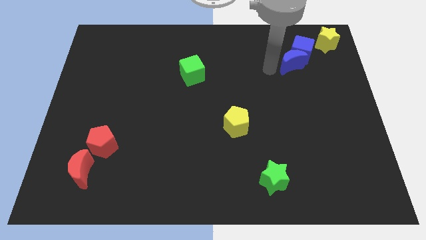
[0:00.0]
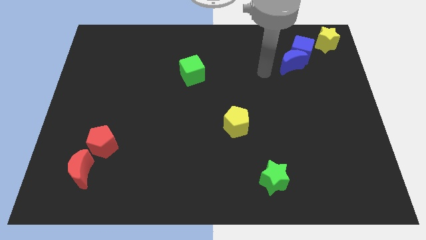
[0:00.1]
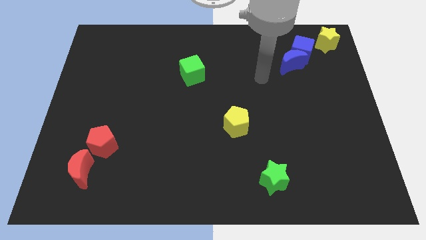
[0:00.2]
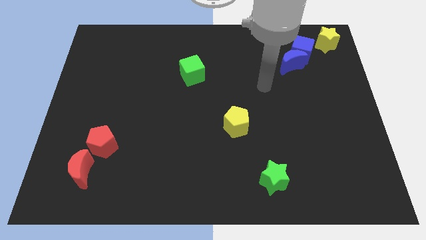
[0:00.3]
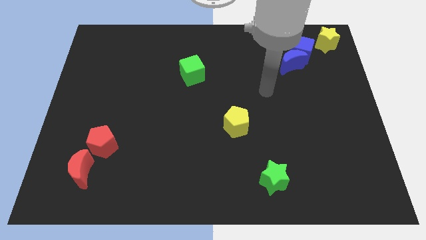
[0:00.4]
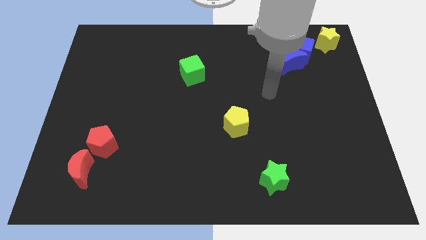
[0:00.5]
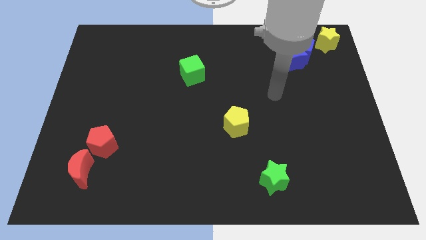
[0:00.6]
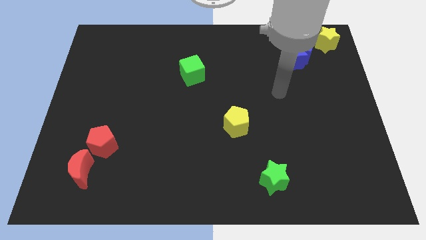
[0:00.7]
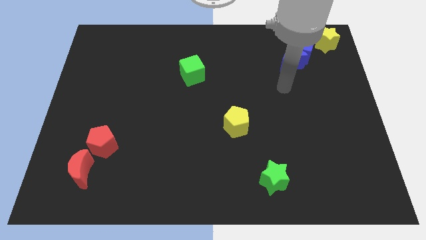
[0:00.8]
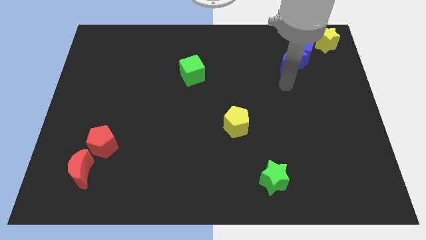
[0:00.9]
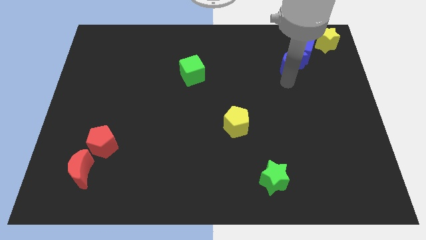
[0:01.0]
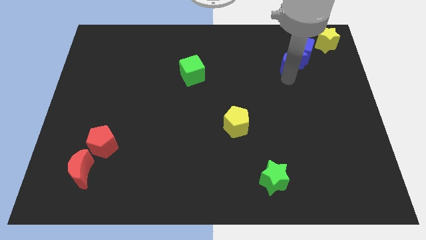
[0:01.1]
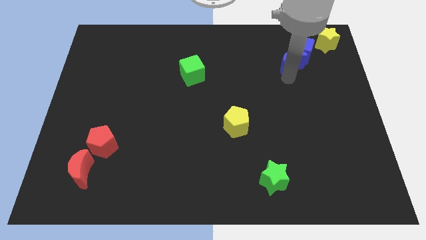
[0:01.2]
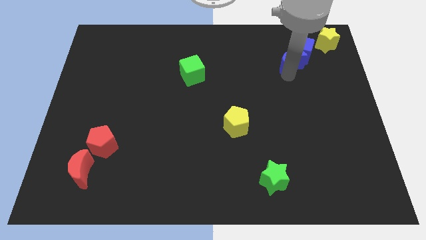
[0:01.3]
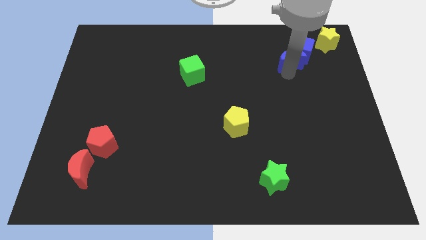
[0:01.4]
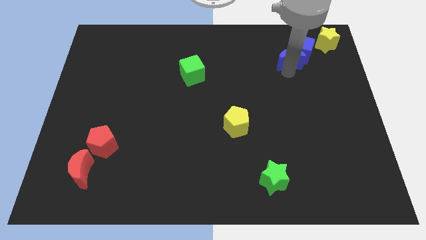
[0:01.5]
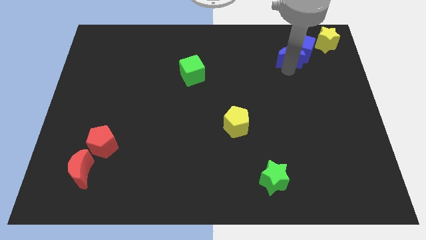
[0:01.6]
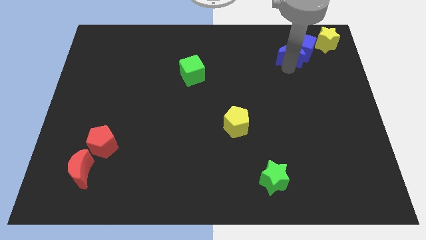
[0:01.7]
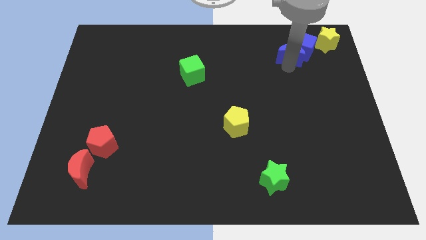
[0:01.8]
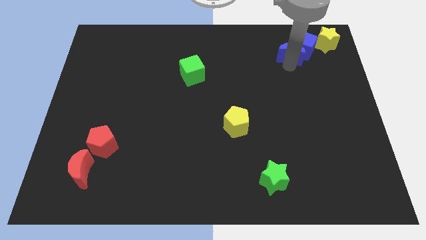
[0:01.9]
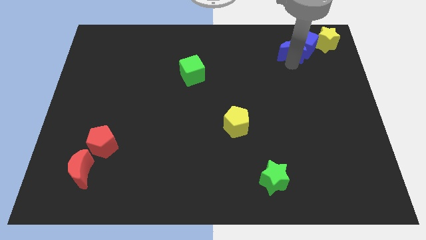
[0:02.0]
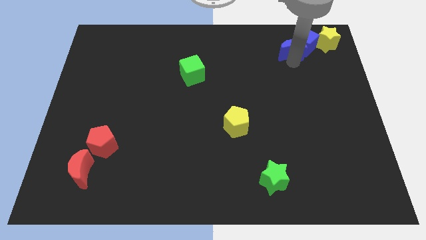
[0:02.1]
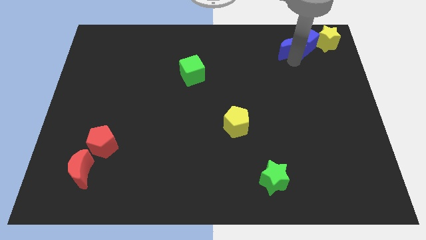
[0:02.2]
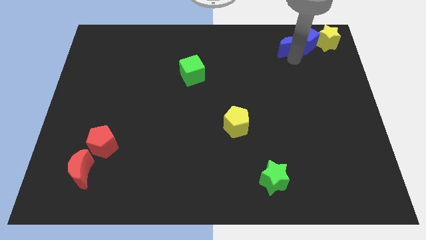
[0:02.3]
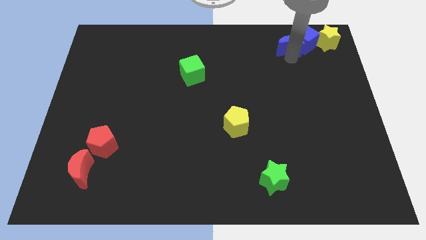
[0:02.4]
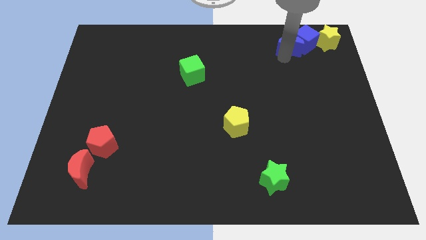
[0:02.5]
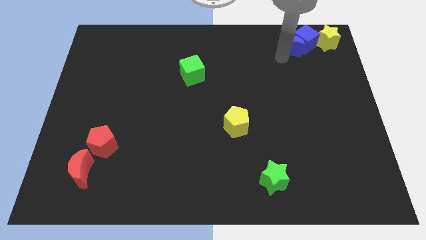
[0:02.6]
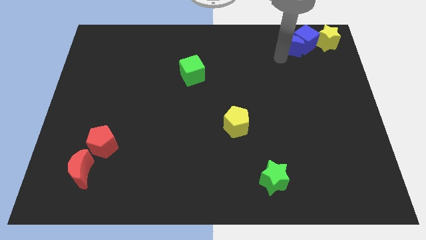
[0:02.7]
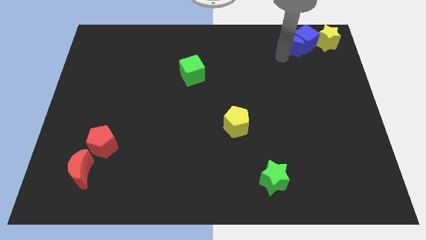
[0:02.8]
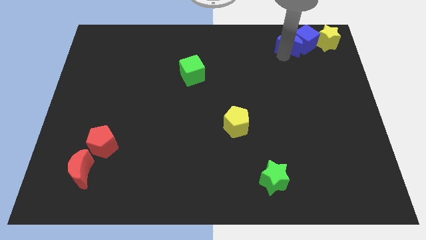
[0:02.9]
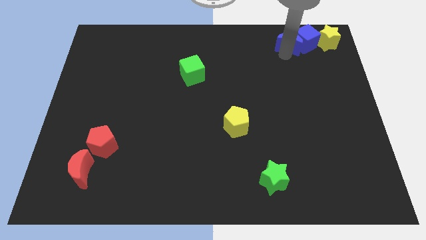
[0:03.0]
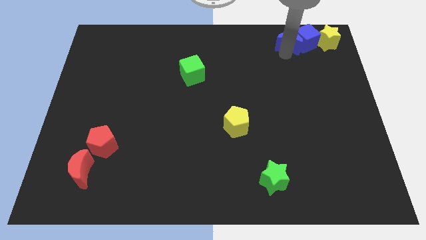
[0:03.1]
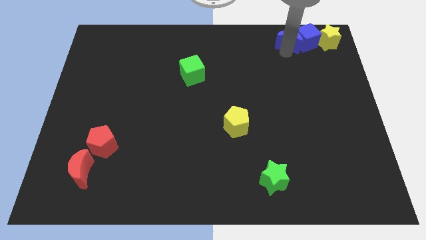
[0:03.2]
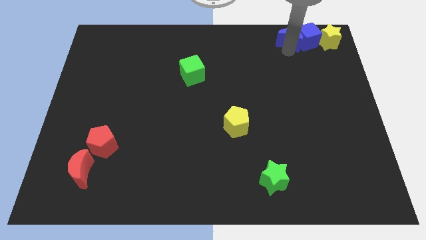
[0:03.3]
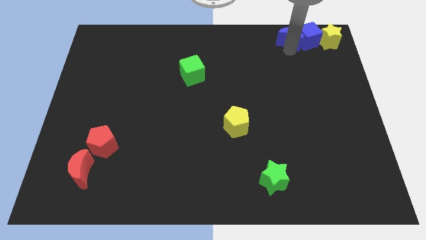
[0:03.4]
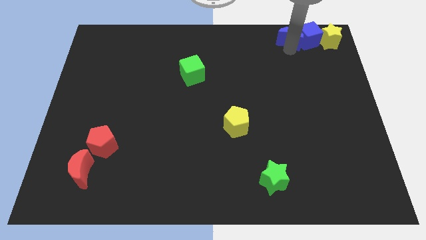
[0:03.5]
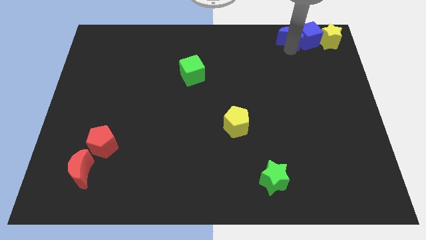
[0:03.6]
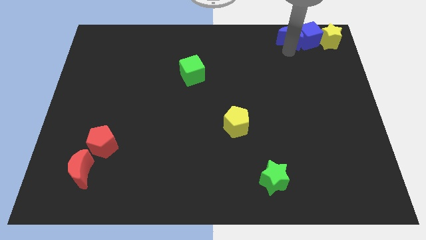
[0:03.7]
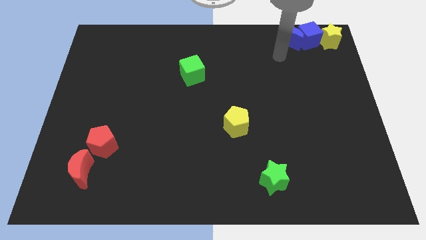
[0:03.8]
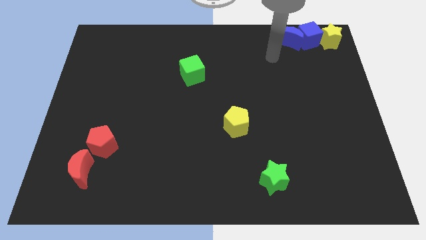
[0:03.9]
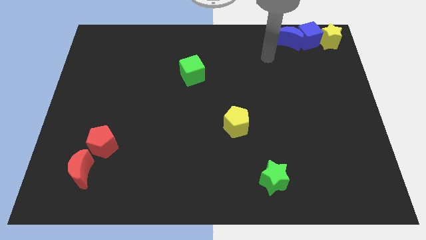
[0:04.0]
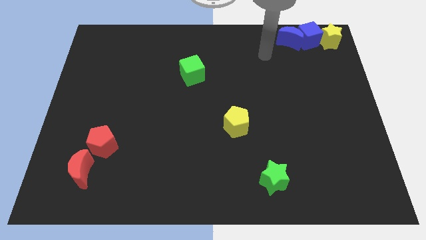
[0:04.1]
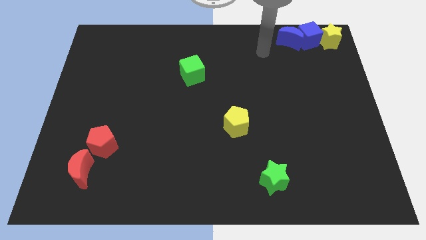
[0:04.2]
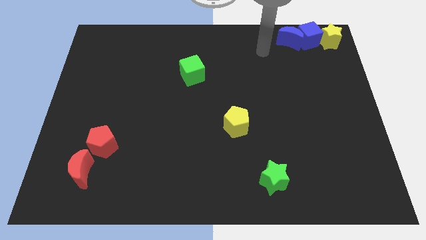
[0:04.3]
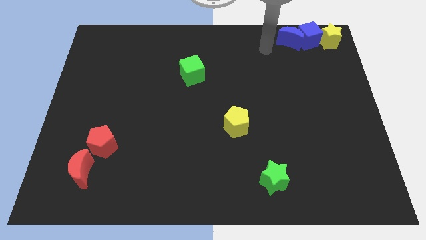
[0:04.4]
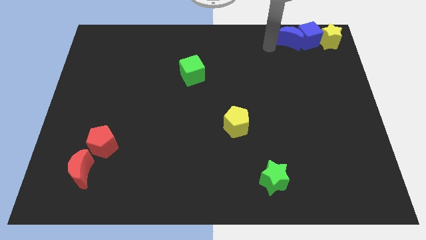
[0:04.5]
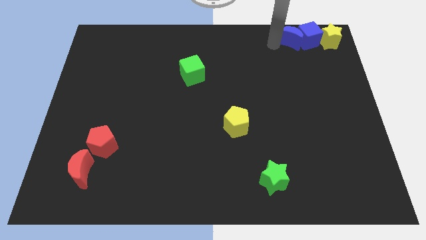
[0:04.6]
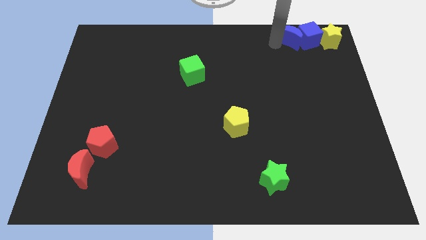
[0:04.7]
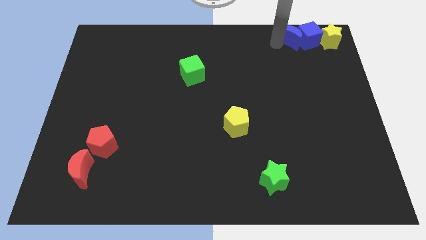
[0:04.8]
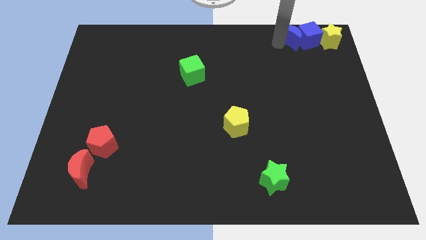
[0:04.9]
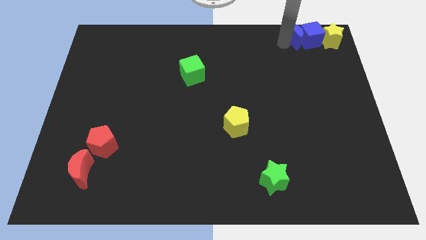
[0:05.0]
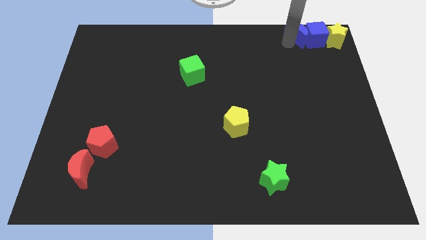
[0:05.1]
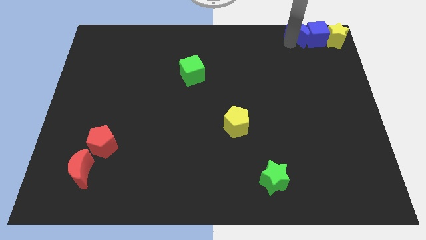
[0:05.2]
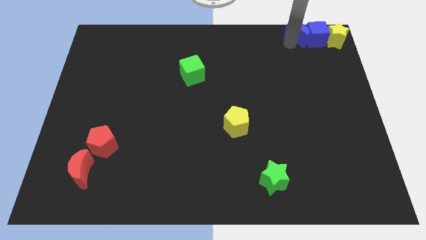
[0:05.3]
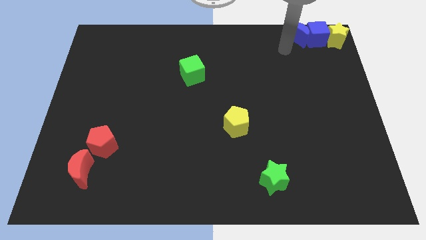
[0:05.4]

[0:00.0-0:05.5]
push the group of blue blocks to the left of the yellow star

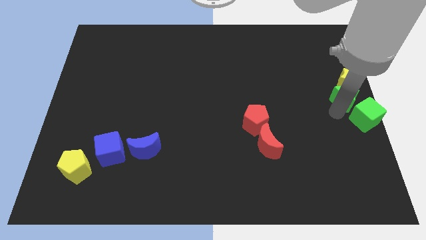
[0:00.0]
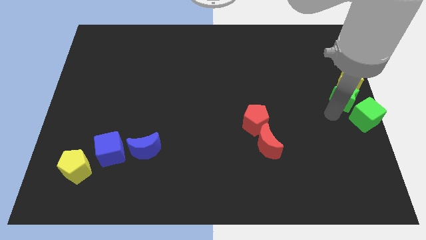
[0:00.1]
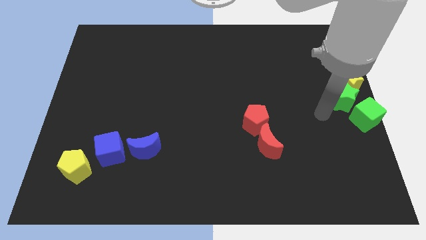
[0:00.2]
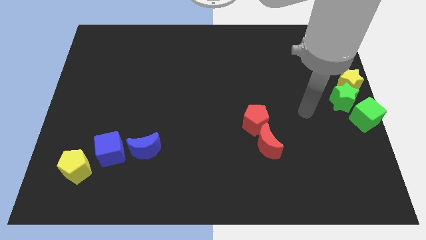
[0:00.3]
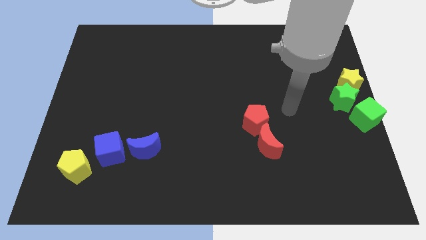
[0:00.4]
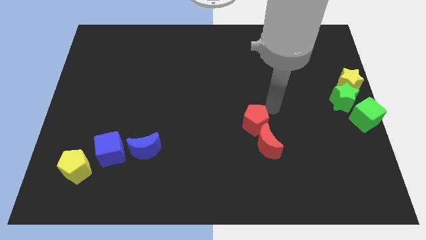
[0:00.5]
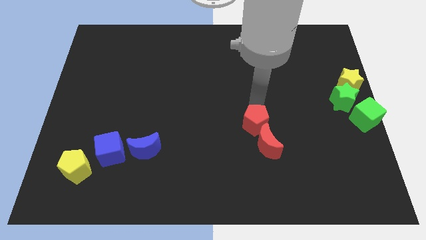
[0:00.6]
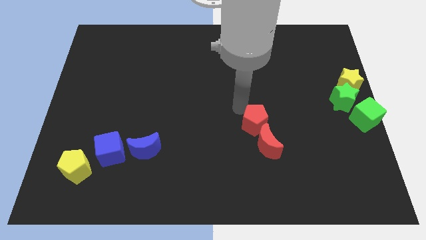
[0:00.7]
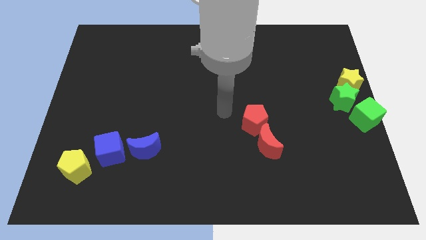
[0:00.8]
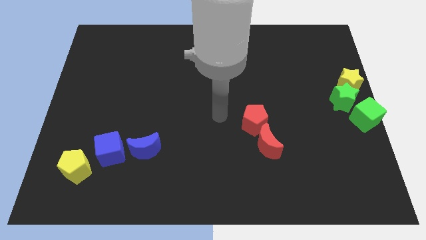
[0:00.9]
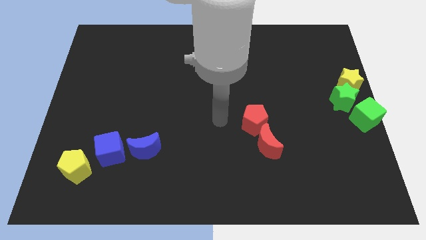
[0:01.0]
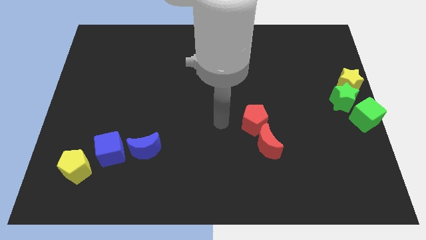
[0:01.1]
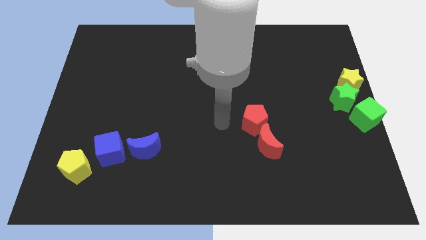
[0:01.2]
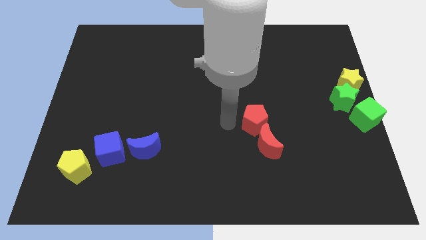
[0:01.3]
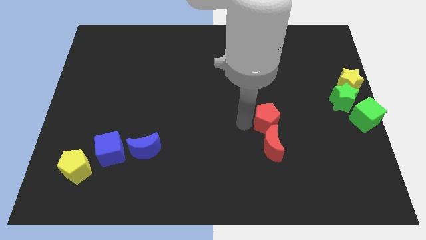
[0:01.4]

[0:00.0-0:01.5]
point your arm at the left of the red pentagon

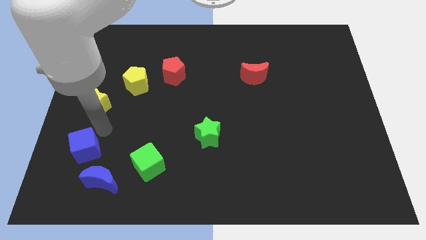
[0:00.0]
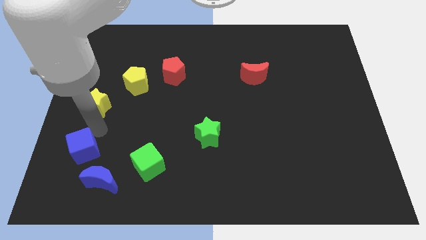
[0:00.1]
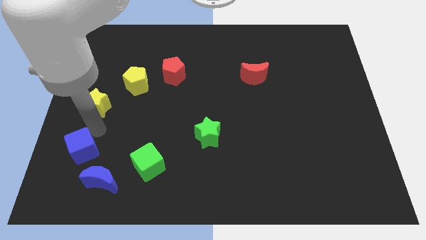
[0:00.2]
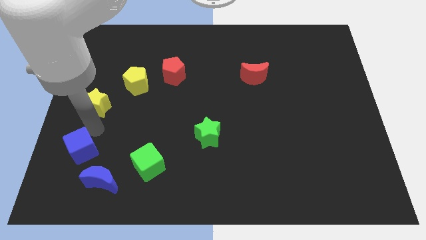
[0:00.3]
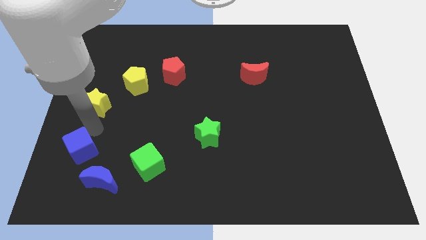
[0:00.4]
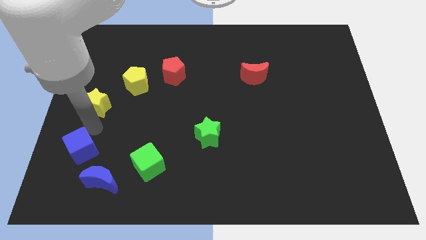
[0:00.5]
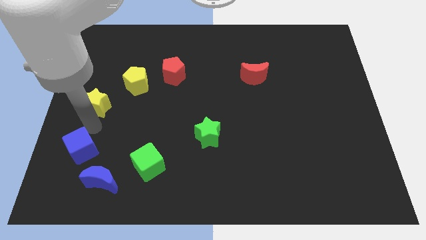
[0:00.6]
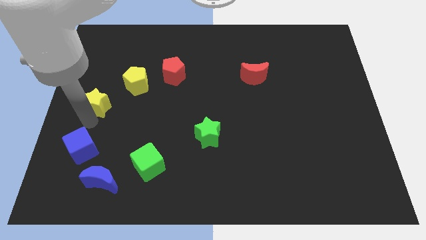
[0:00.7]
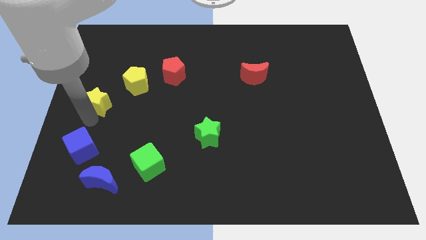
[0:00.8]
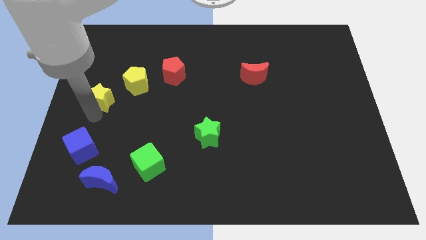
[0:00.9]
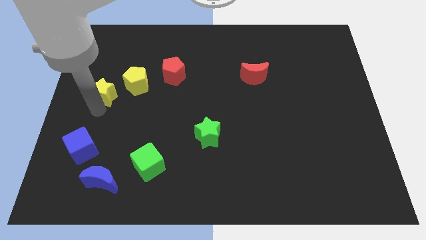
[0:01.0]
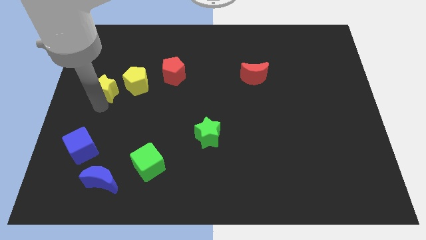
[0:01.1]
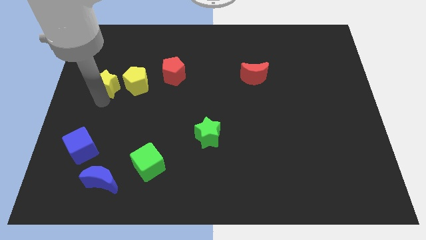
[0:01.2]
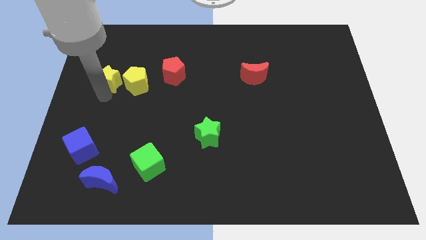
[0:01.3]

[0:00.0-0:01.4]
place the yellow star upwards

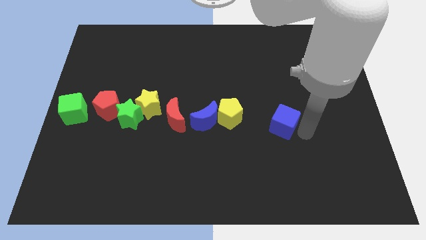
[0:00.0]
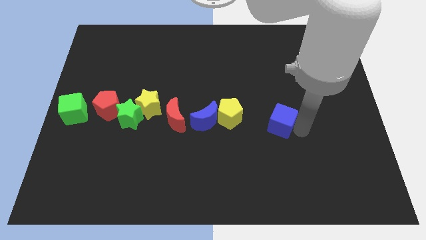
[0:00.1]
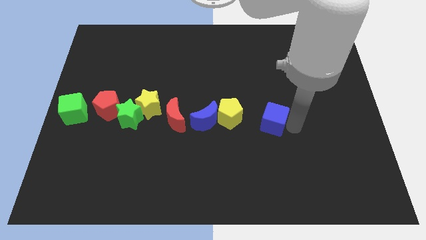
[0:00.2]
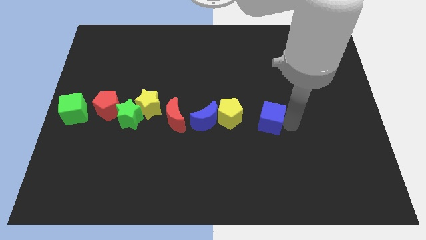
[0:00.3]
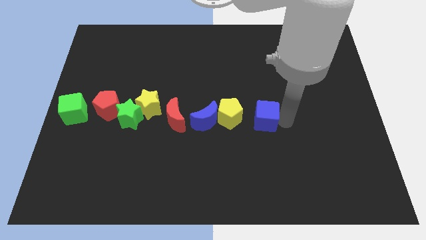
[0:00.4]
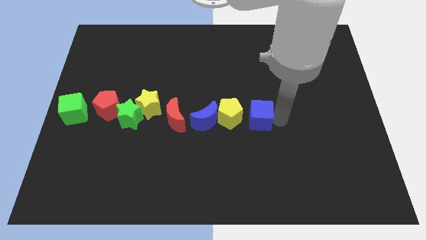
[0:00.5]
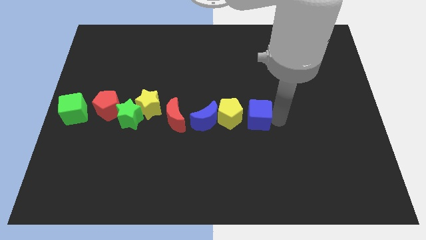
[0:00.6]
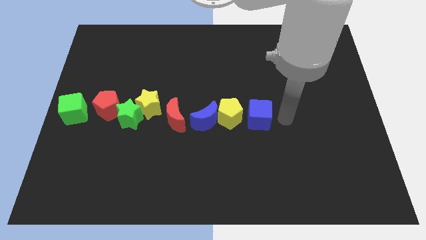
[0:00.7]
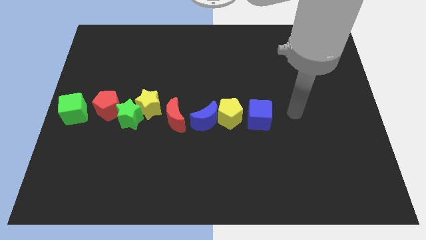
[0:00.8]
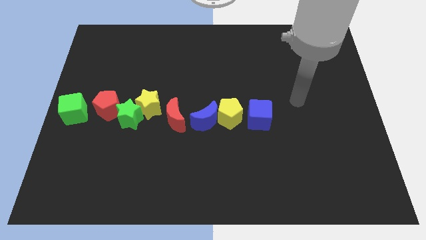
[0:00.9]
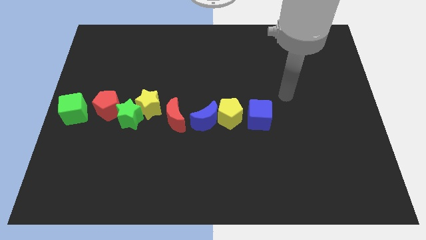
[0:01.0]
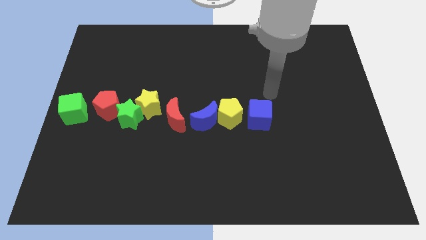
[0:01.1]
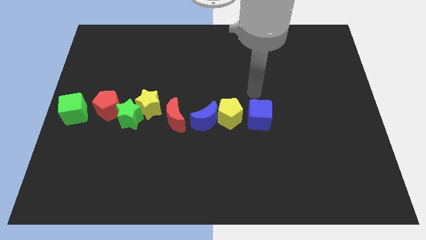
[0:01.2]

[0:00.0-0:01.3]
slide the blue cube slightly towards the yellow pentagon
